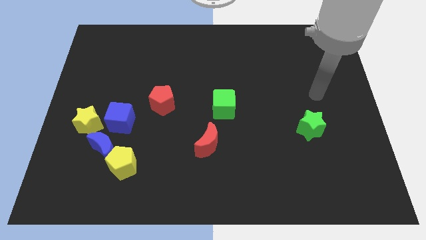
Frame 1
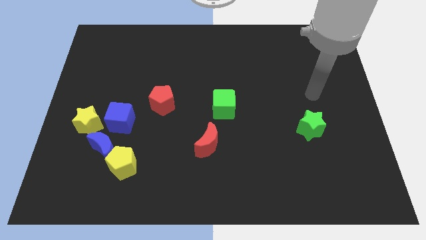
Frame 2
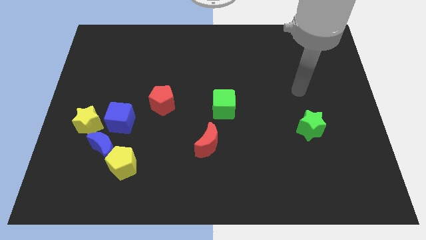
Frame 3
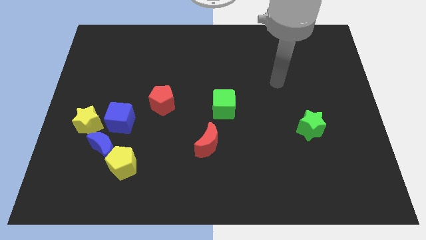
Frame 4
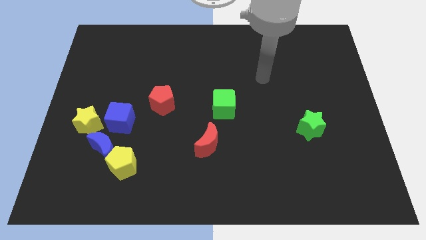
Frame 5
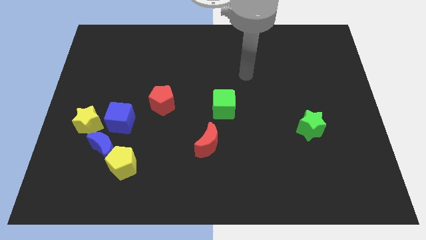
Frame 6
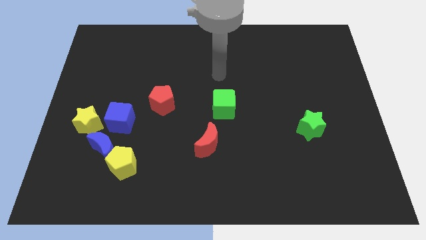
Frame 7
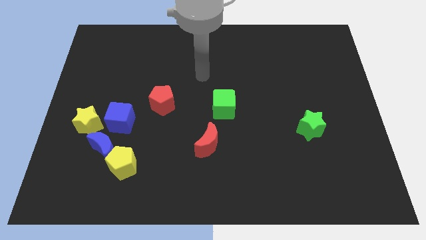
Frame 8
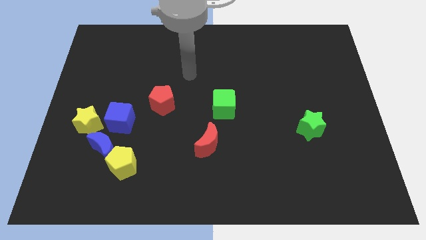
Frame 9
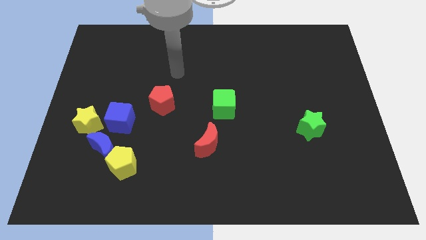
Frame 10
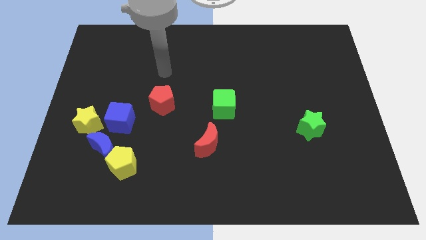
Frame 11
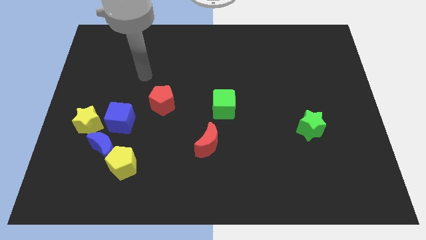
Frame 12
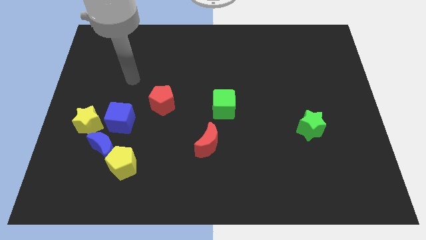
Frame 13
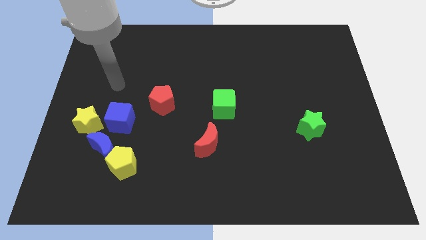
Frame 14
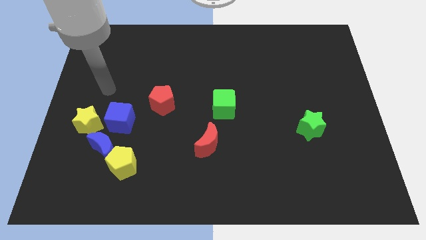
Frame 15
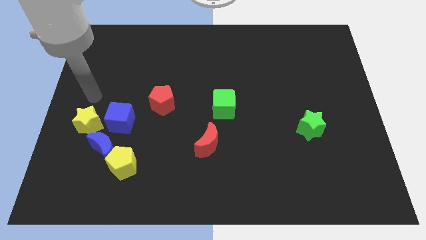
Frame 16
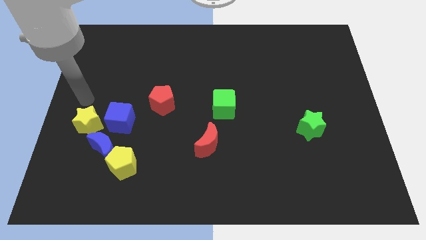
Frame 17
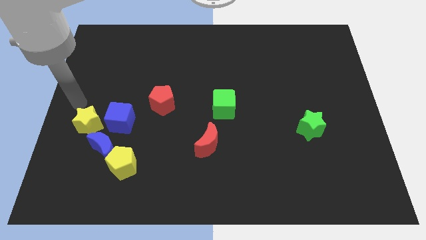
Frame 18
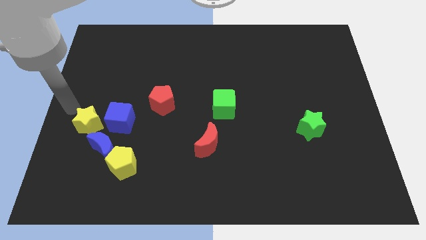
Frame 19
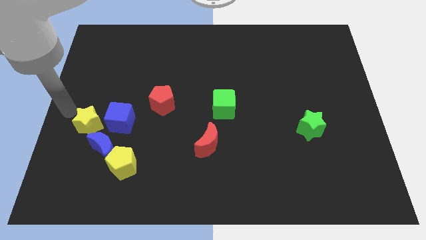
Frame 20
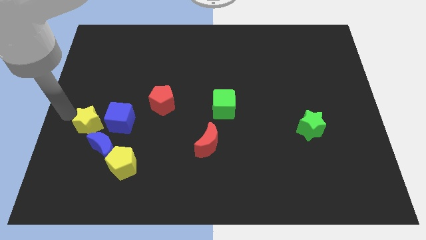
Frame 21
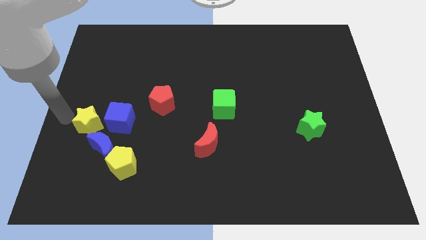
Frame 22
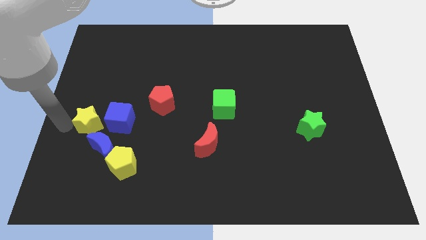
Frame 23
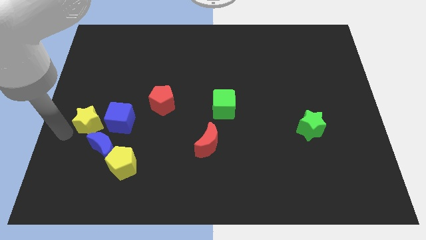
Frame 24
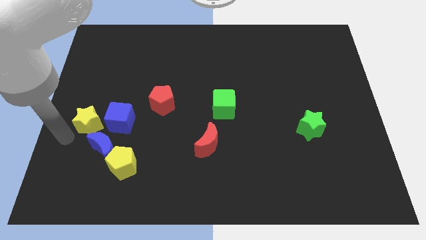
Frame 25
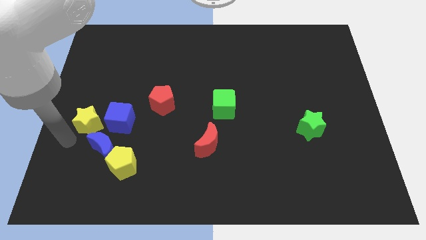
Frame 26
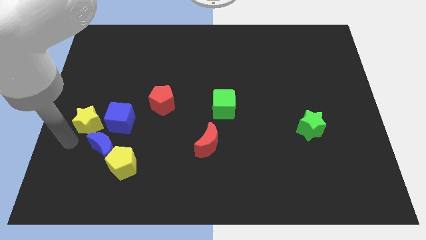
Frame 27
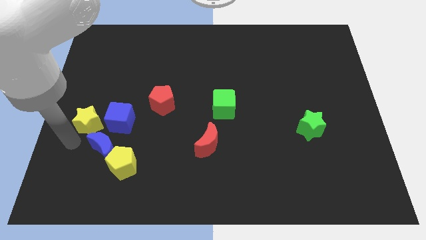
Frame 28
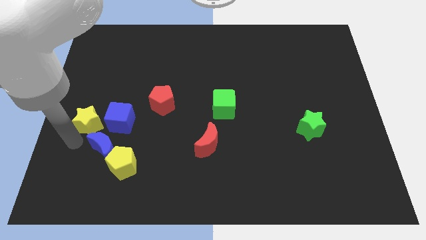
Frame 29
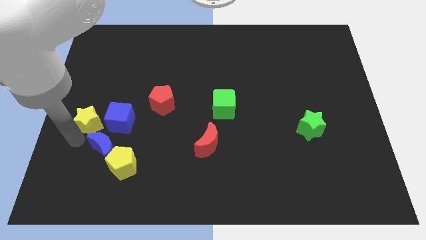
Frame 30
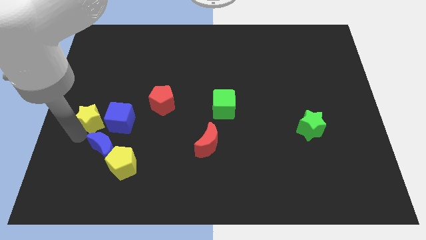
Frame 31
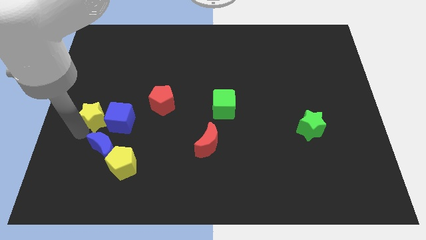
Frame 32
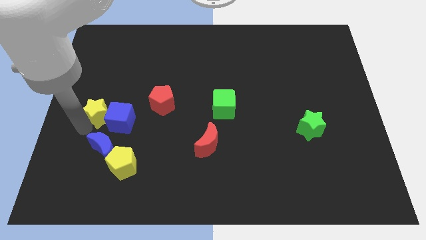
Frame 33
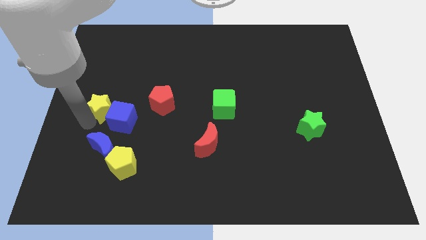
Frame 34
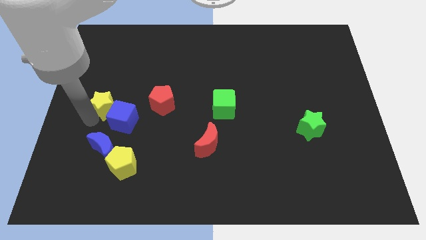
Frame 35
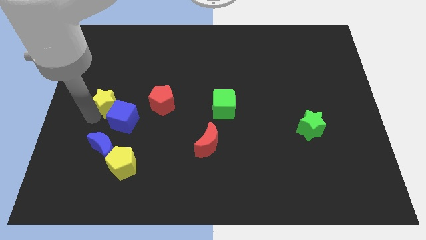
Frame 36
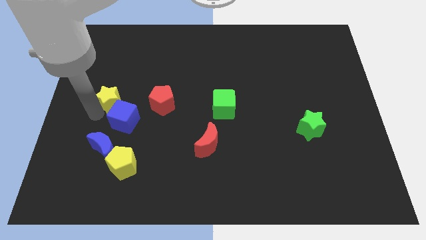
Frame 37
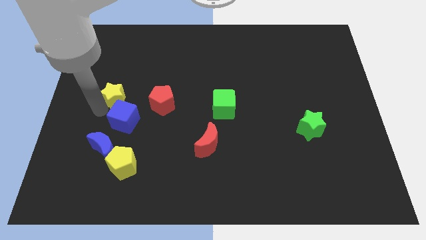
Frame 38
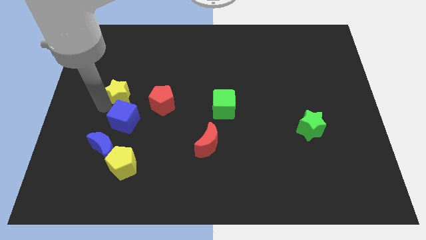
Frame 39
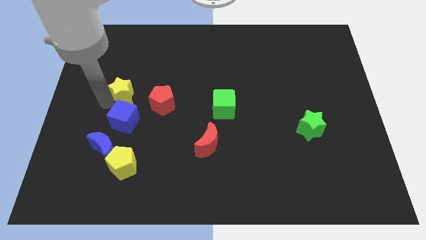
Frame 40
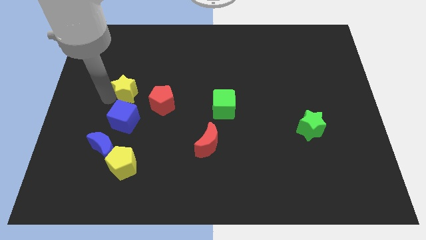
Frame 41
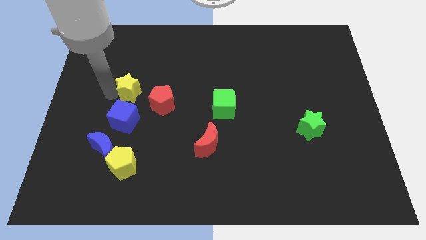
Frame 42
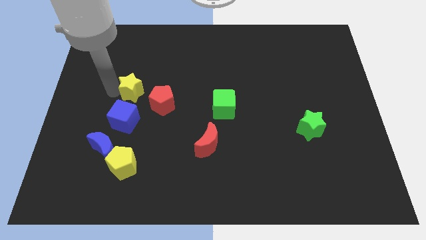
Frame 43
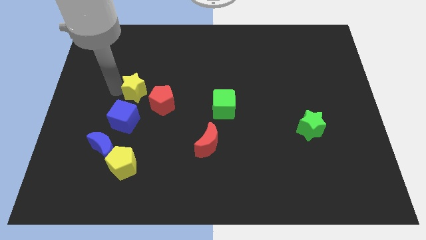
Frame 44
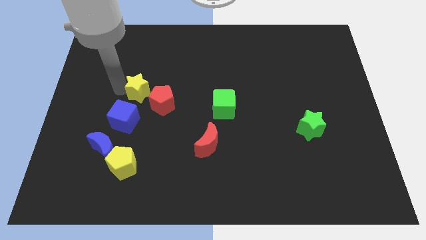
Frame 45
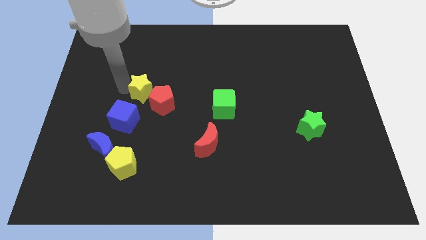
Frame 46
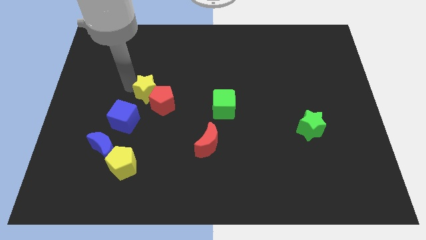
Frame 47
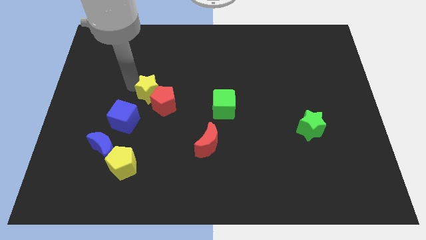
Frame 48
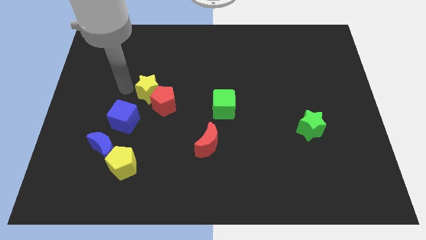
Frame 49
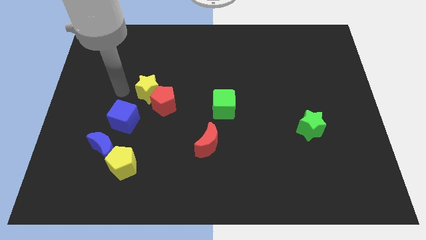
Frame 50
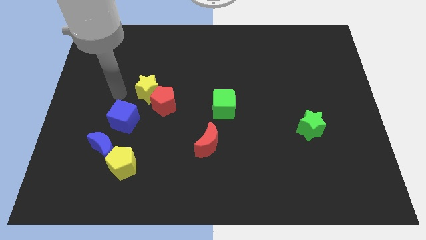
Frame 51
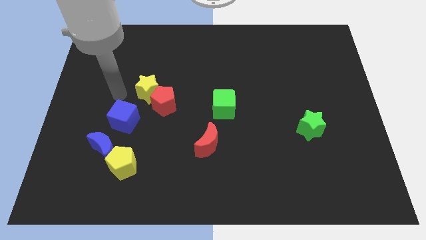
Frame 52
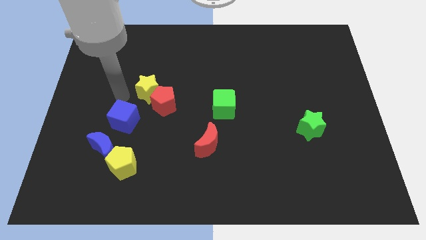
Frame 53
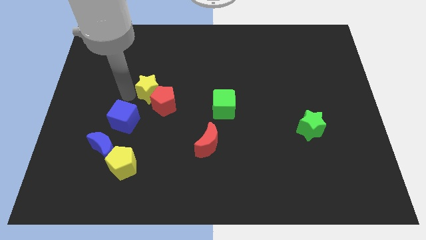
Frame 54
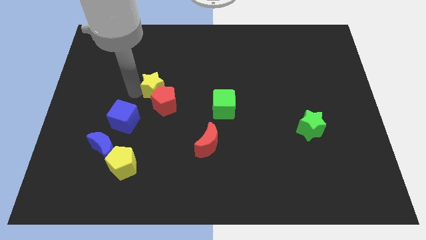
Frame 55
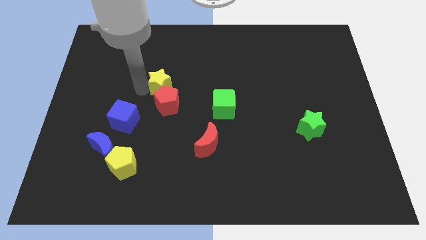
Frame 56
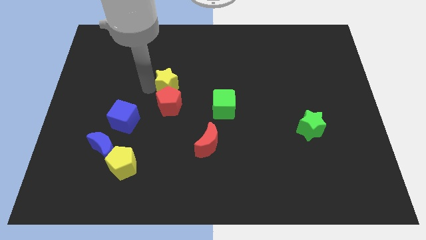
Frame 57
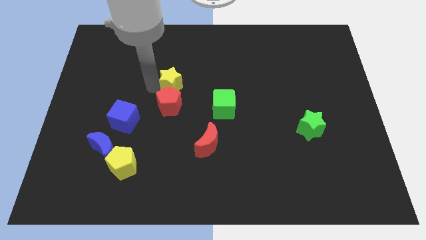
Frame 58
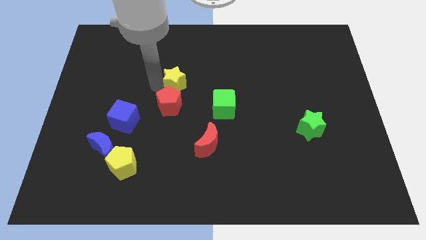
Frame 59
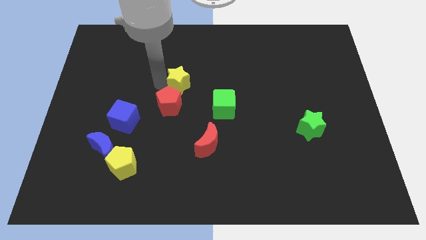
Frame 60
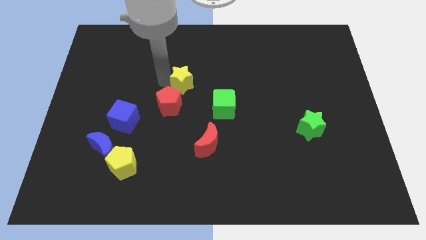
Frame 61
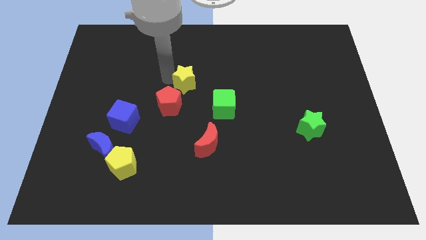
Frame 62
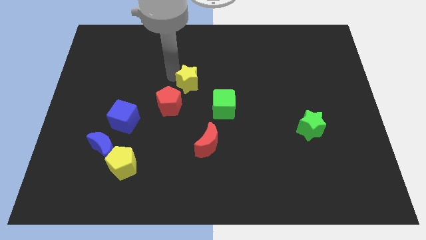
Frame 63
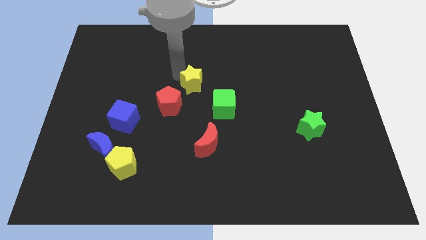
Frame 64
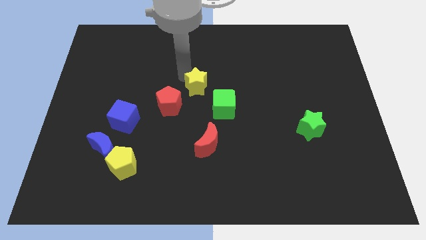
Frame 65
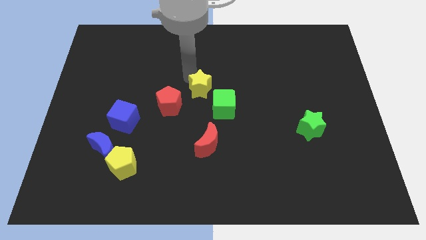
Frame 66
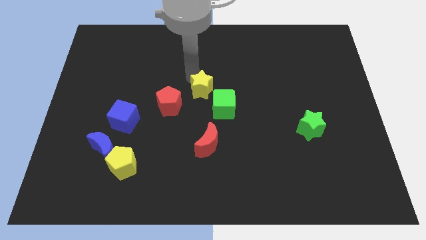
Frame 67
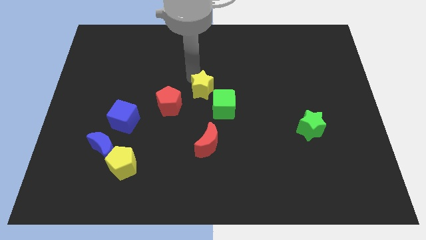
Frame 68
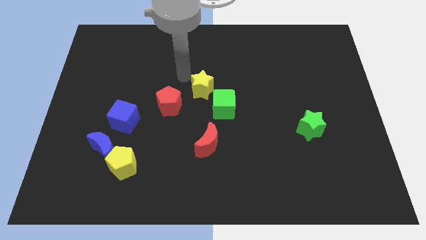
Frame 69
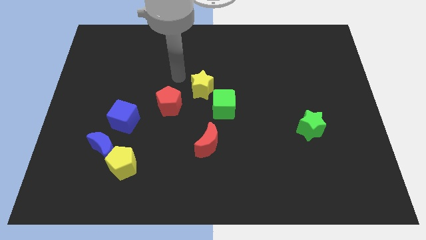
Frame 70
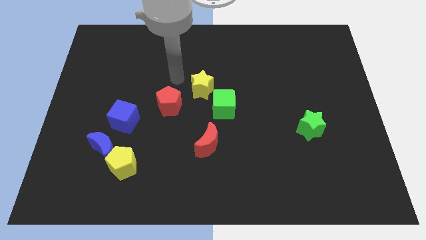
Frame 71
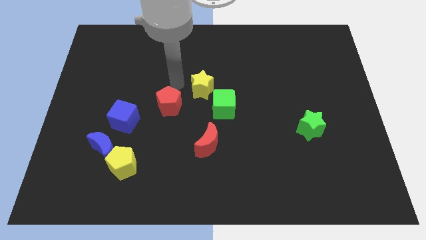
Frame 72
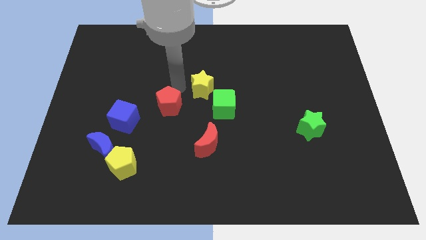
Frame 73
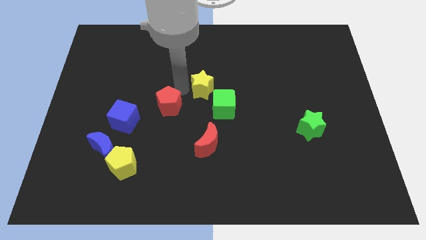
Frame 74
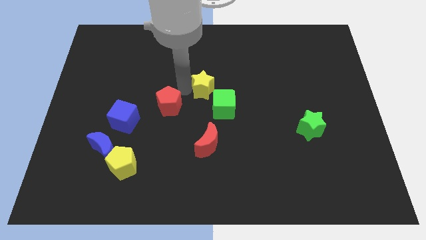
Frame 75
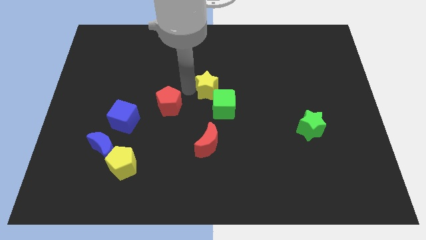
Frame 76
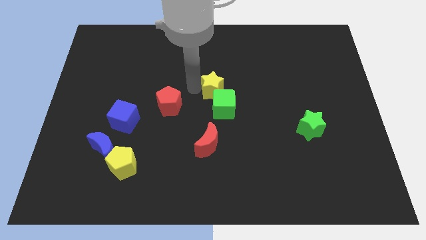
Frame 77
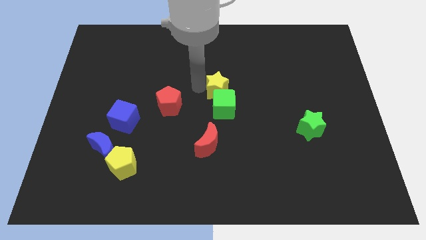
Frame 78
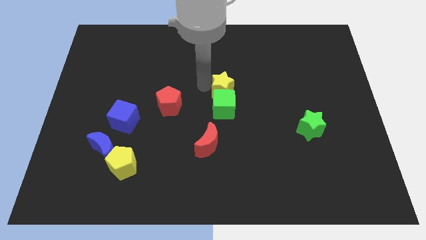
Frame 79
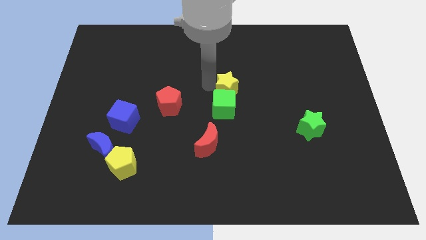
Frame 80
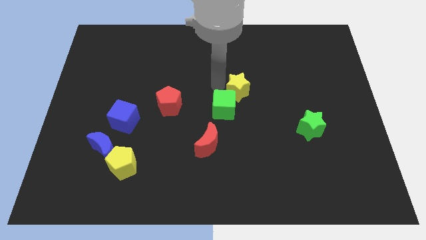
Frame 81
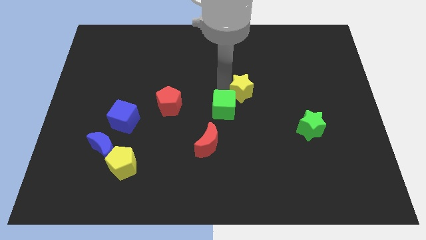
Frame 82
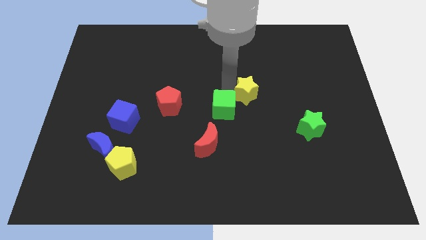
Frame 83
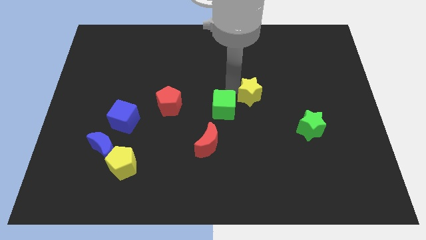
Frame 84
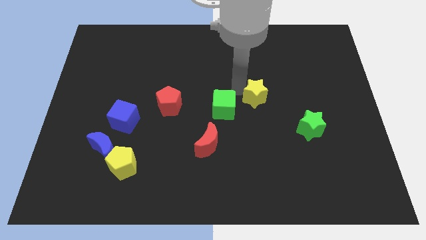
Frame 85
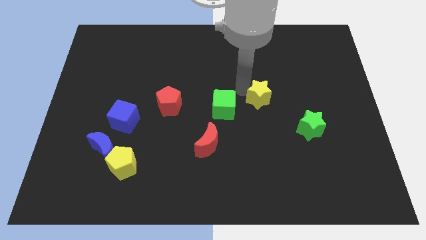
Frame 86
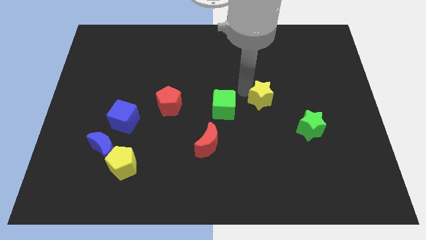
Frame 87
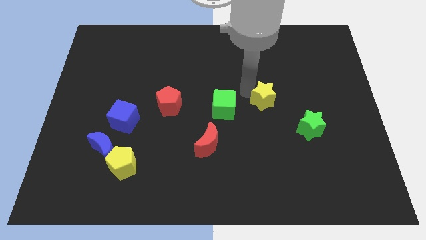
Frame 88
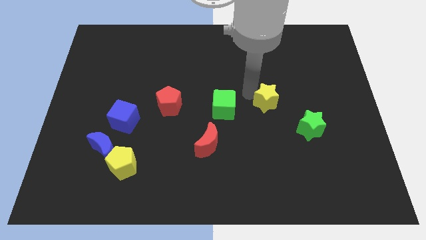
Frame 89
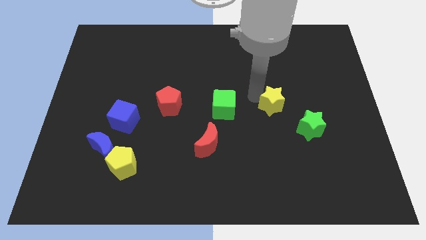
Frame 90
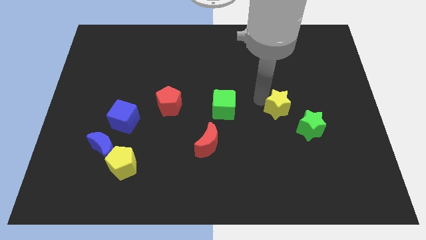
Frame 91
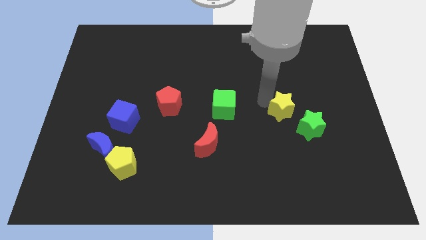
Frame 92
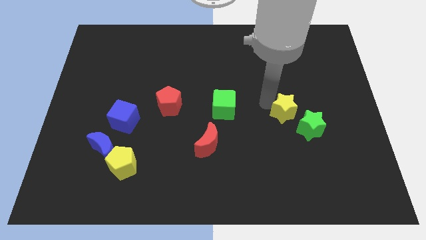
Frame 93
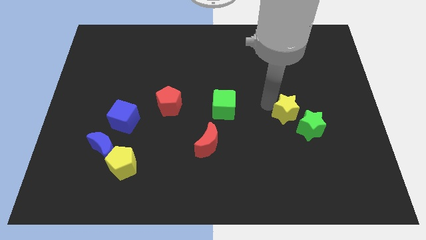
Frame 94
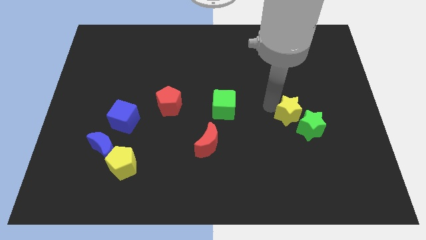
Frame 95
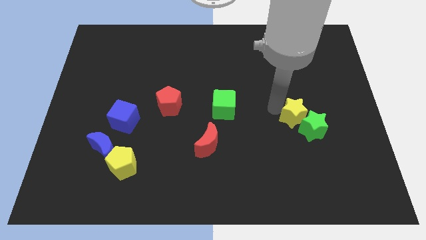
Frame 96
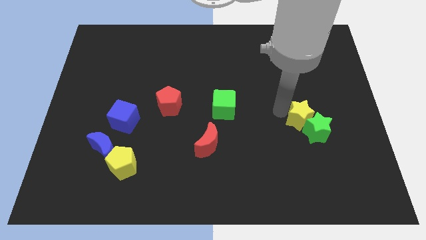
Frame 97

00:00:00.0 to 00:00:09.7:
slide the yellow star next to the green star
